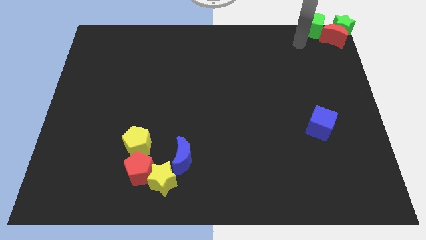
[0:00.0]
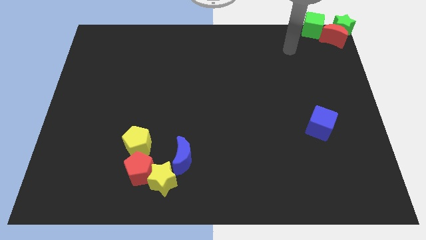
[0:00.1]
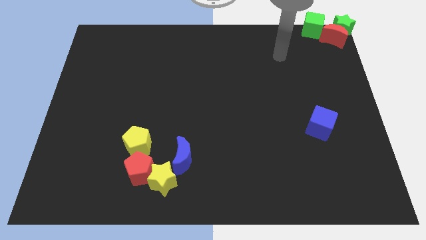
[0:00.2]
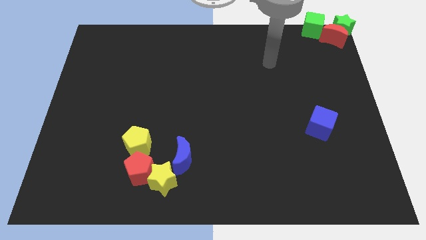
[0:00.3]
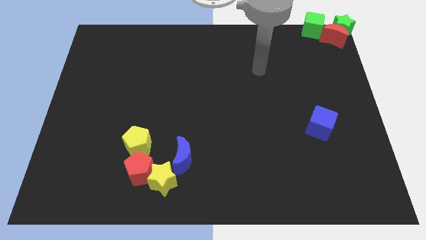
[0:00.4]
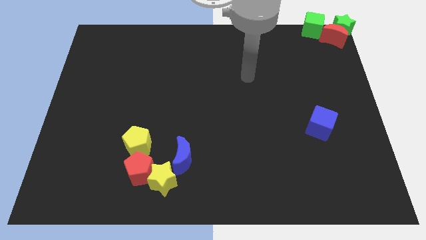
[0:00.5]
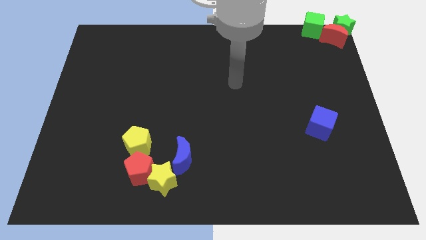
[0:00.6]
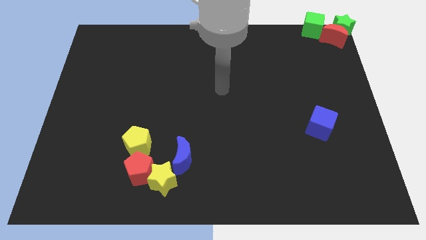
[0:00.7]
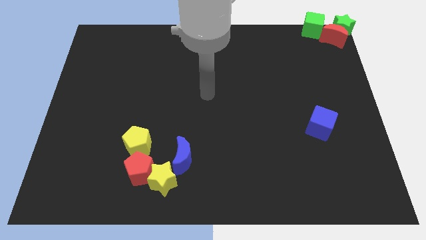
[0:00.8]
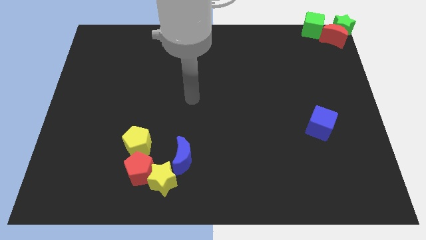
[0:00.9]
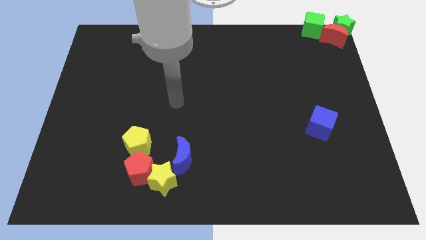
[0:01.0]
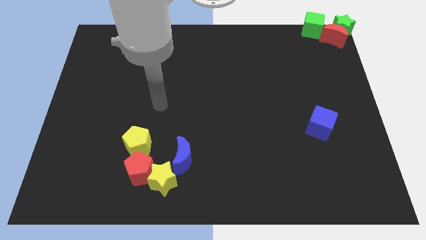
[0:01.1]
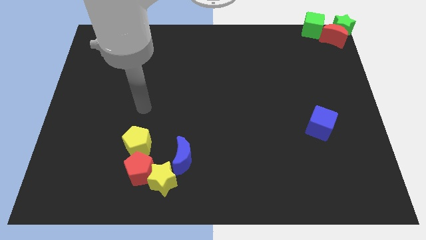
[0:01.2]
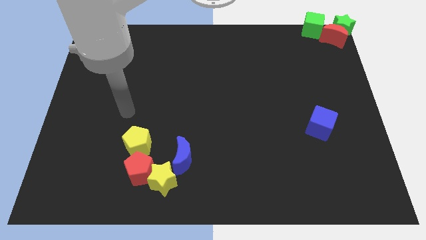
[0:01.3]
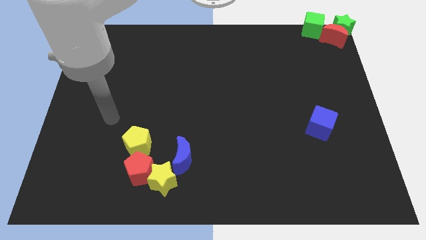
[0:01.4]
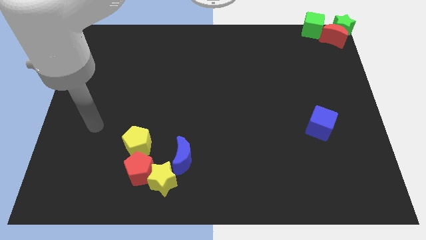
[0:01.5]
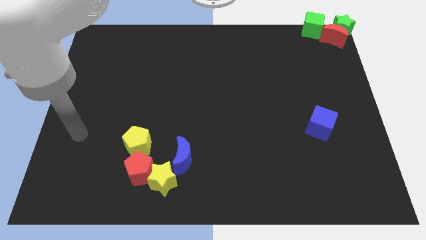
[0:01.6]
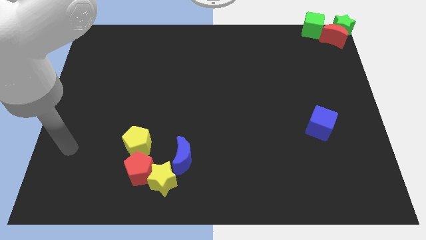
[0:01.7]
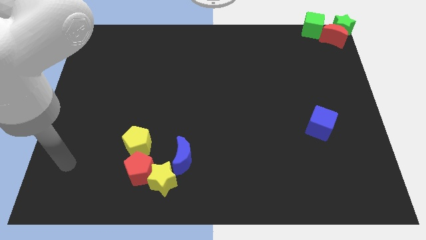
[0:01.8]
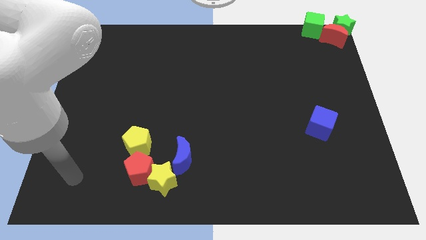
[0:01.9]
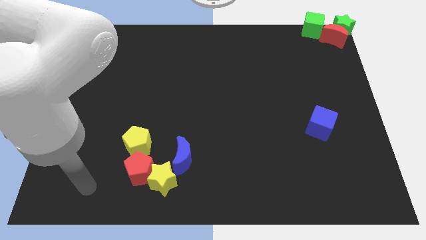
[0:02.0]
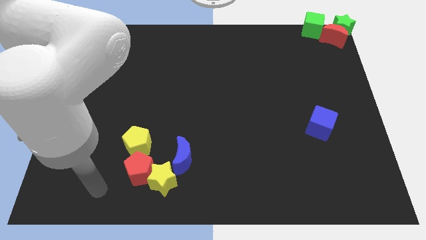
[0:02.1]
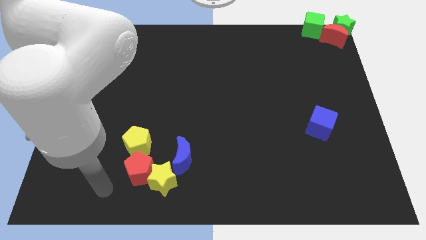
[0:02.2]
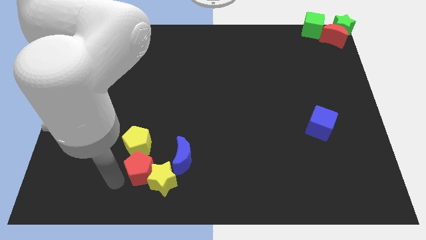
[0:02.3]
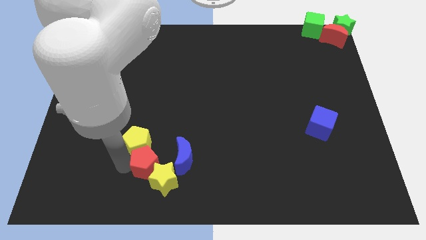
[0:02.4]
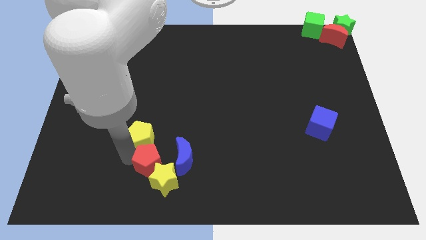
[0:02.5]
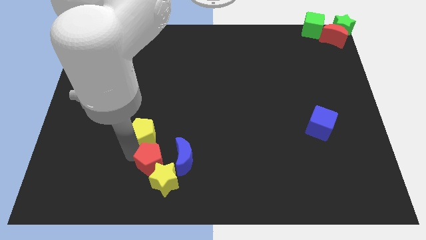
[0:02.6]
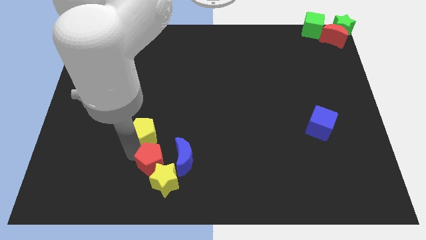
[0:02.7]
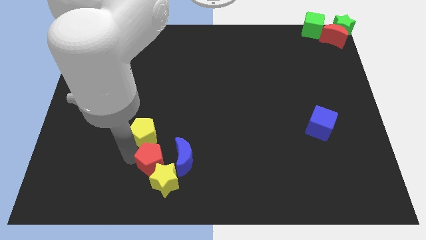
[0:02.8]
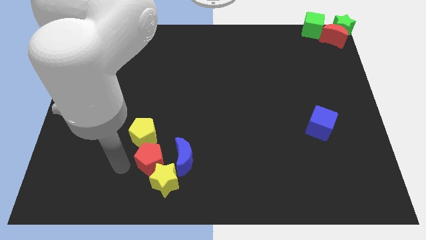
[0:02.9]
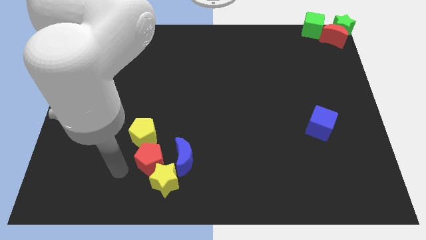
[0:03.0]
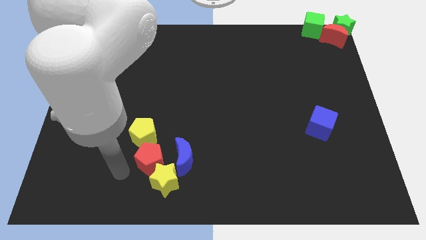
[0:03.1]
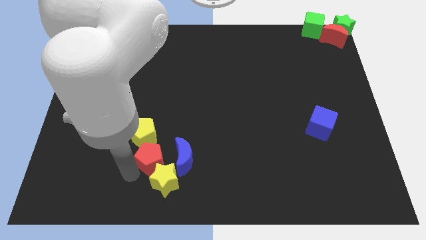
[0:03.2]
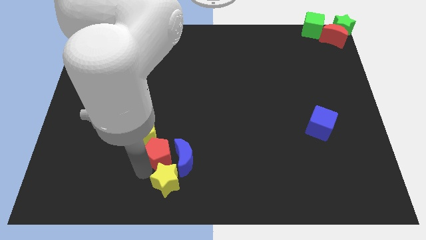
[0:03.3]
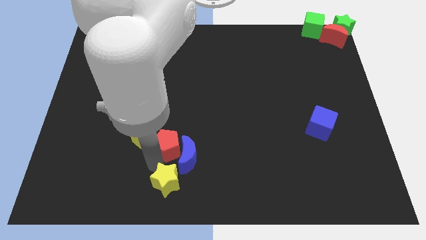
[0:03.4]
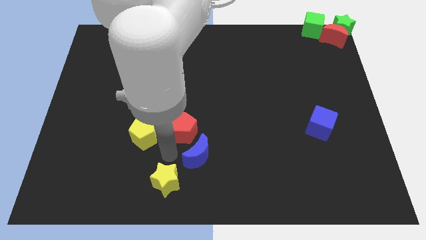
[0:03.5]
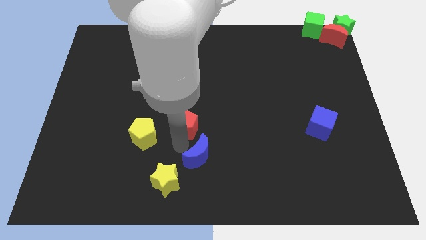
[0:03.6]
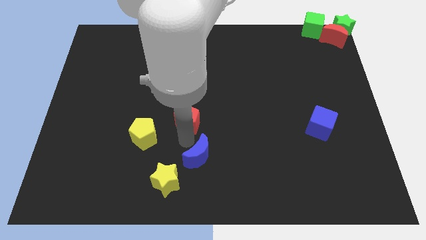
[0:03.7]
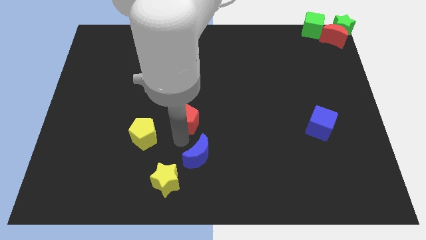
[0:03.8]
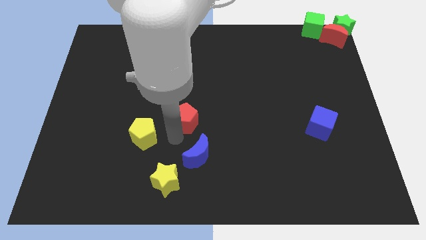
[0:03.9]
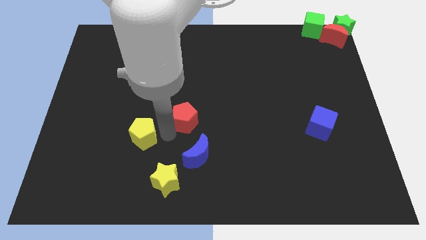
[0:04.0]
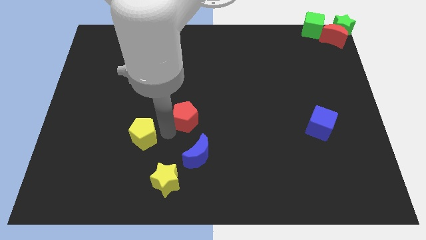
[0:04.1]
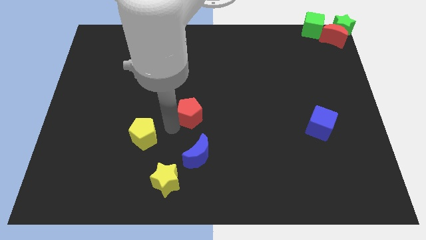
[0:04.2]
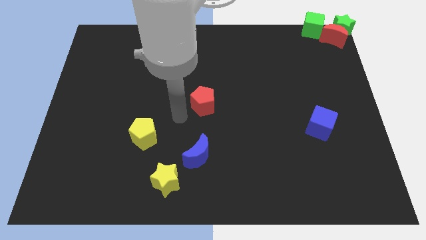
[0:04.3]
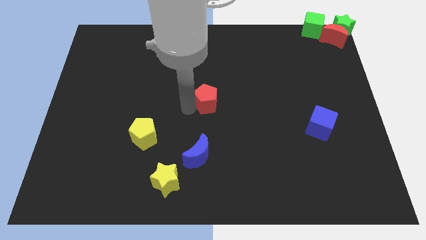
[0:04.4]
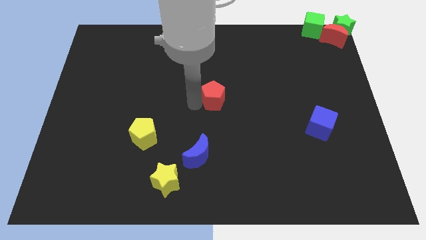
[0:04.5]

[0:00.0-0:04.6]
drag the red pentagon towards center of the board

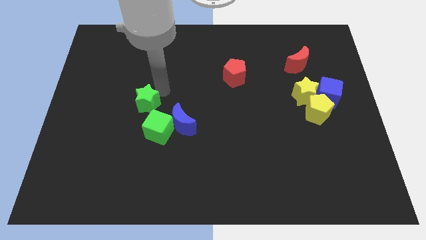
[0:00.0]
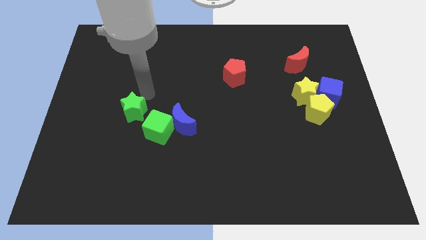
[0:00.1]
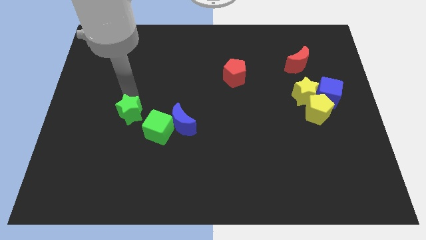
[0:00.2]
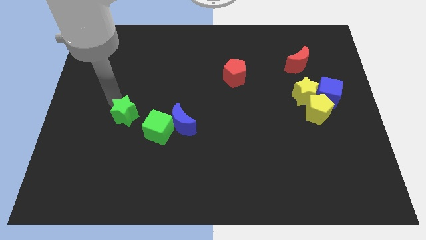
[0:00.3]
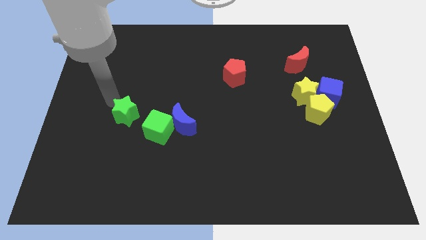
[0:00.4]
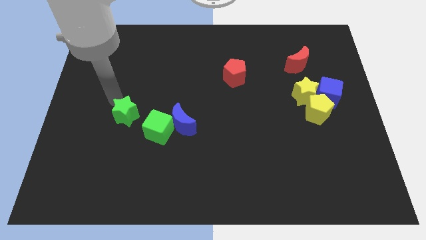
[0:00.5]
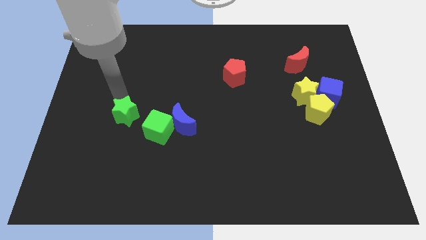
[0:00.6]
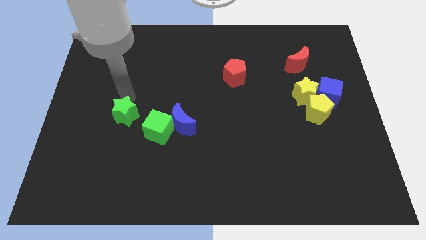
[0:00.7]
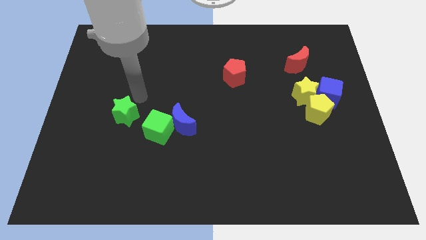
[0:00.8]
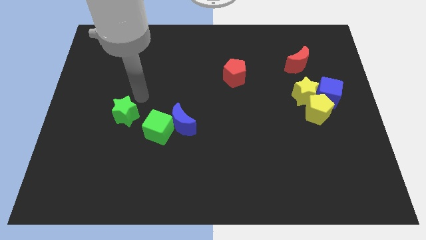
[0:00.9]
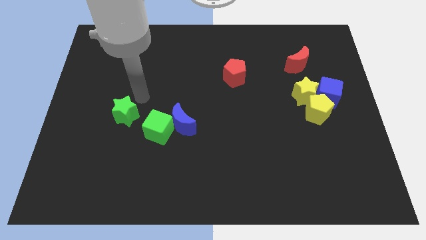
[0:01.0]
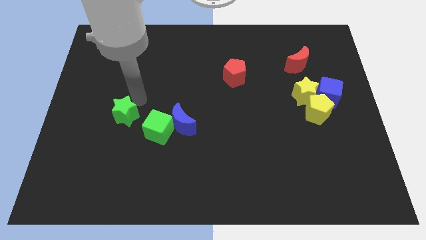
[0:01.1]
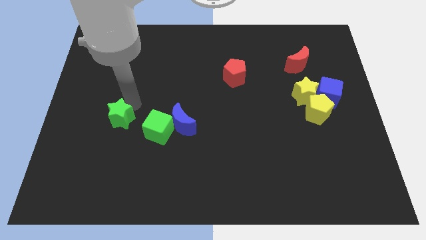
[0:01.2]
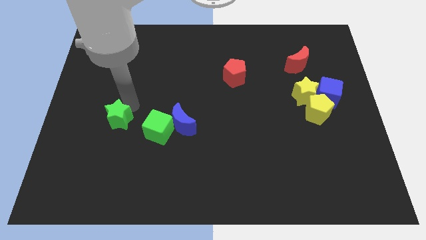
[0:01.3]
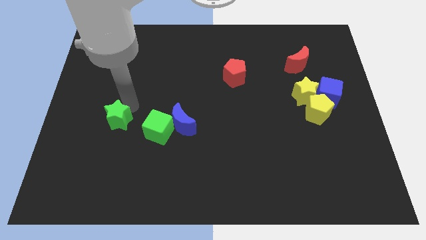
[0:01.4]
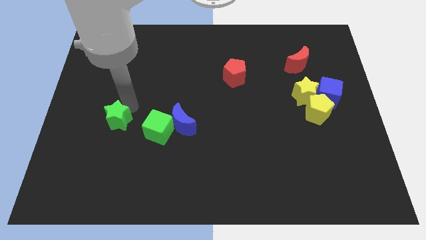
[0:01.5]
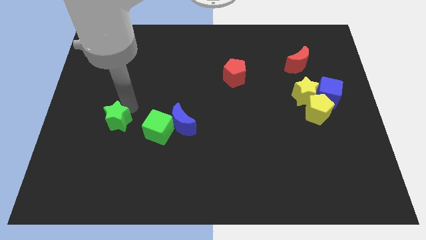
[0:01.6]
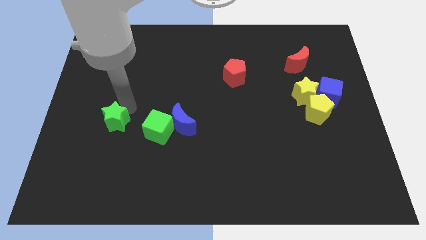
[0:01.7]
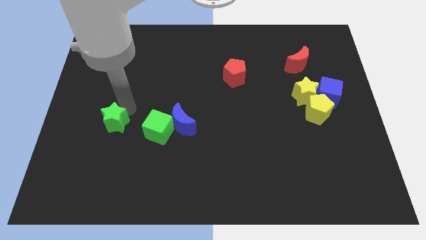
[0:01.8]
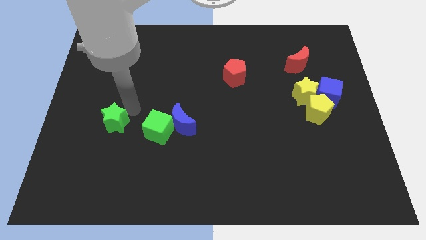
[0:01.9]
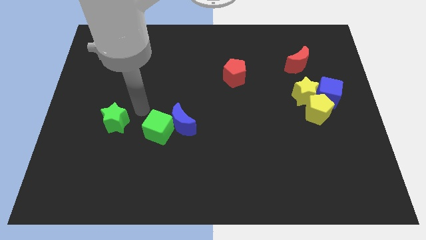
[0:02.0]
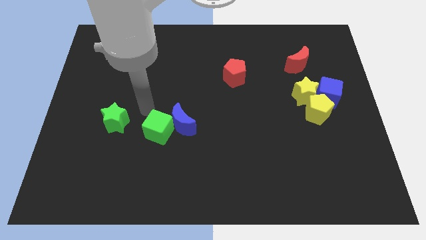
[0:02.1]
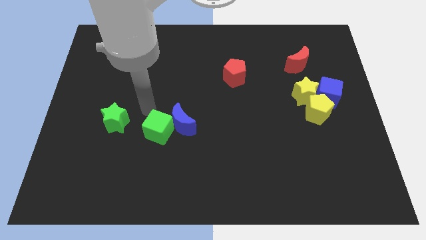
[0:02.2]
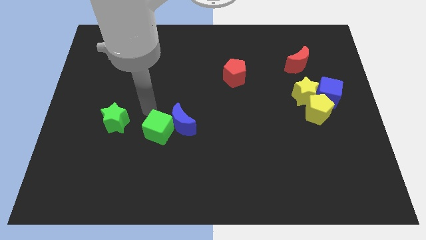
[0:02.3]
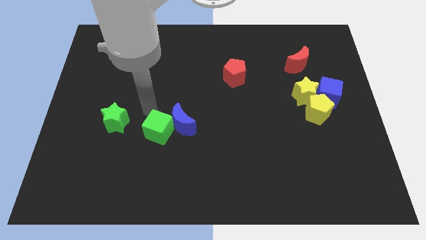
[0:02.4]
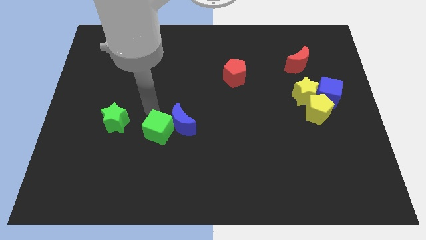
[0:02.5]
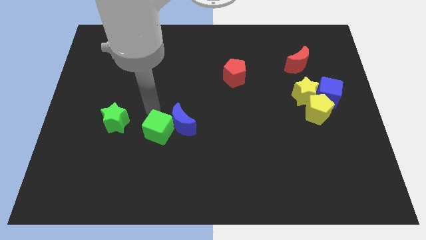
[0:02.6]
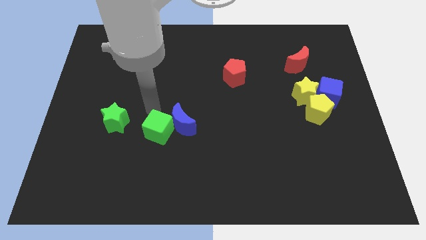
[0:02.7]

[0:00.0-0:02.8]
move green star to left of green cube

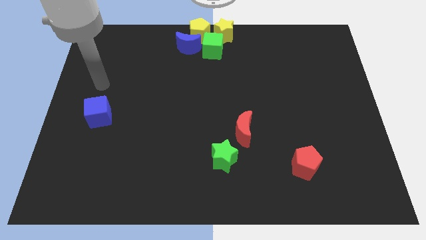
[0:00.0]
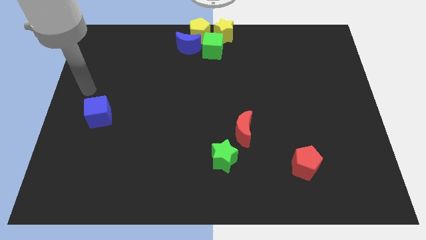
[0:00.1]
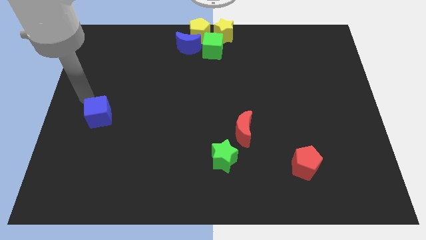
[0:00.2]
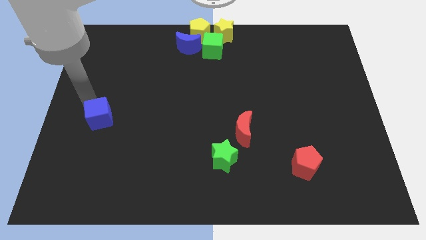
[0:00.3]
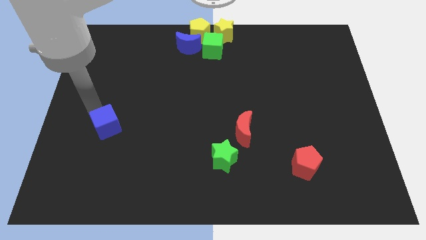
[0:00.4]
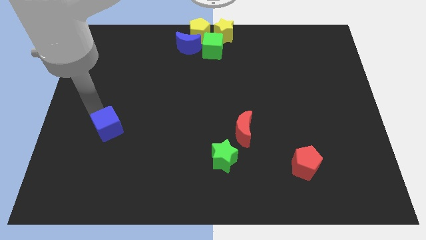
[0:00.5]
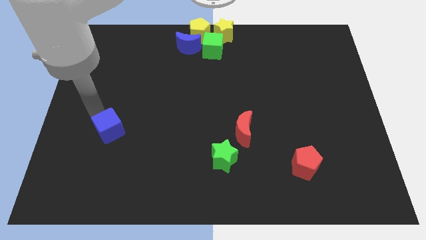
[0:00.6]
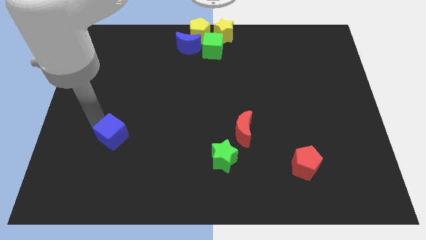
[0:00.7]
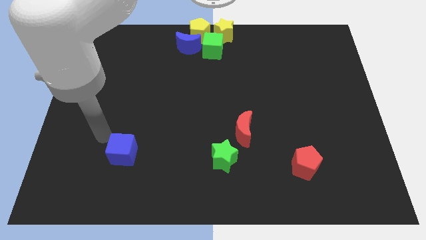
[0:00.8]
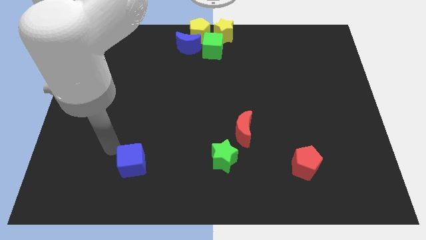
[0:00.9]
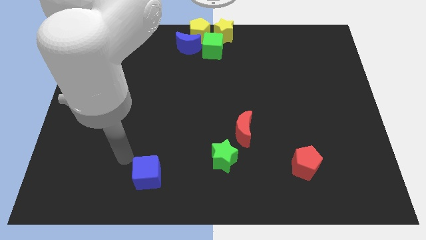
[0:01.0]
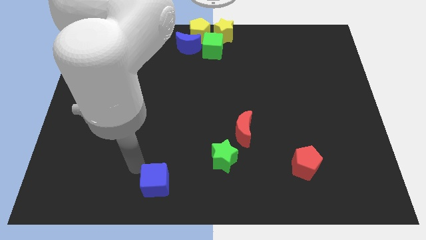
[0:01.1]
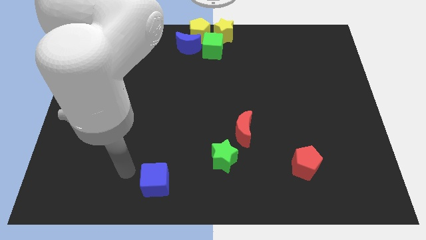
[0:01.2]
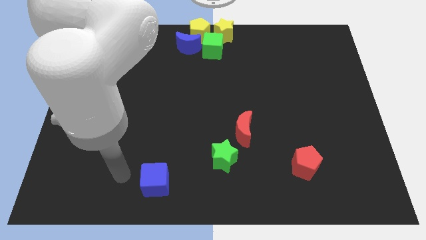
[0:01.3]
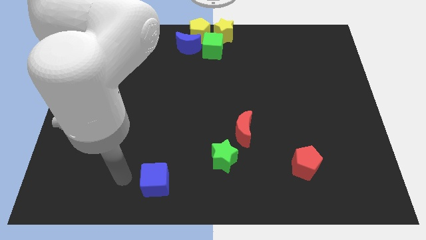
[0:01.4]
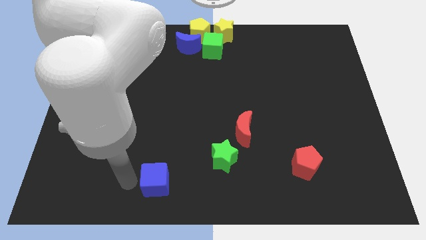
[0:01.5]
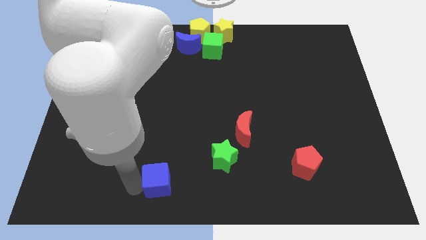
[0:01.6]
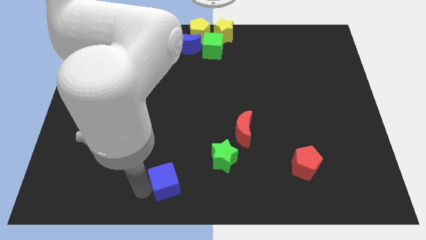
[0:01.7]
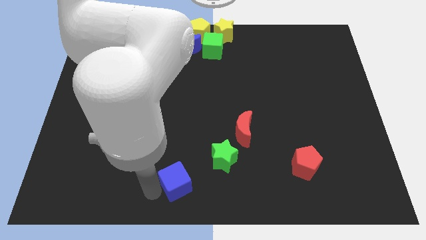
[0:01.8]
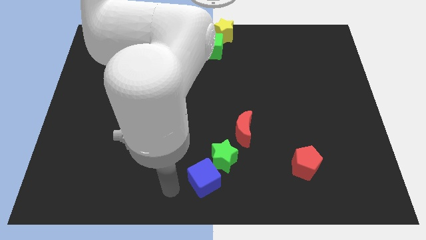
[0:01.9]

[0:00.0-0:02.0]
move blue cube to the bottom left of green star
